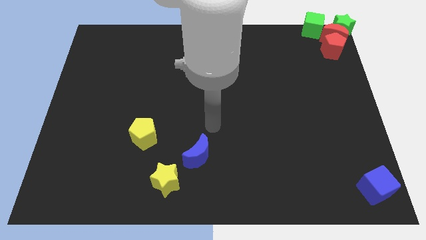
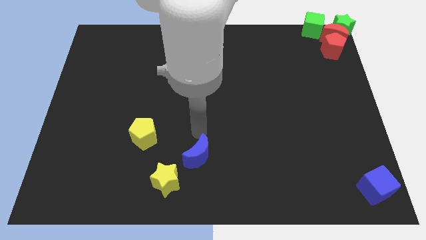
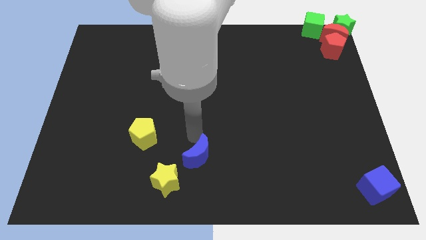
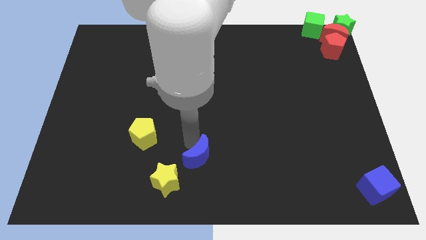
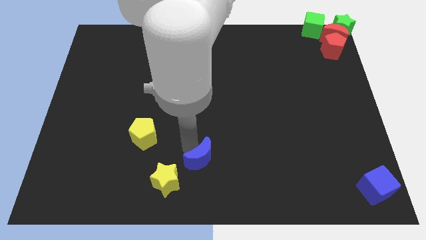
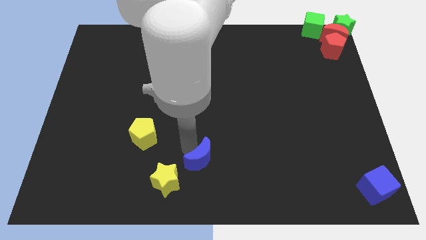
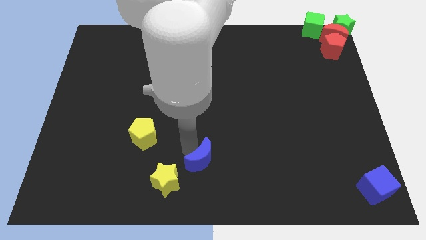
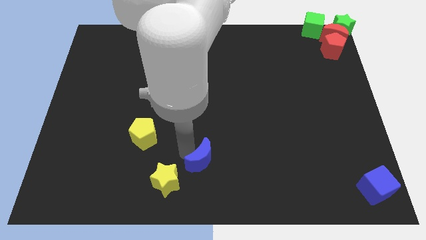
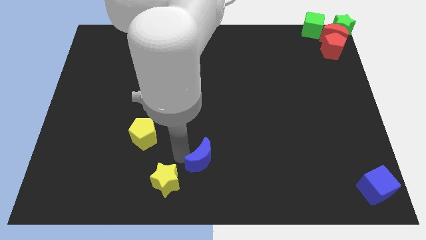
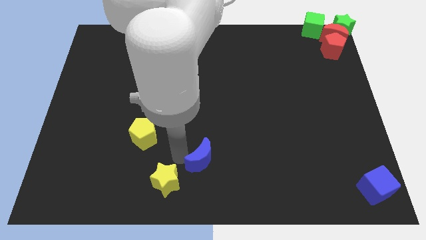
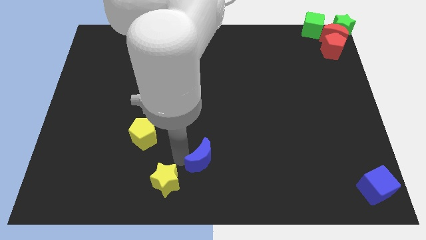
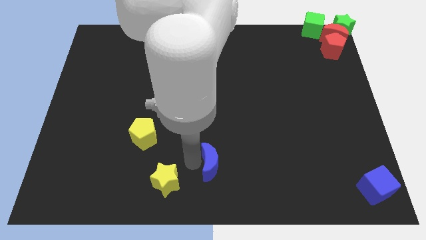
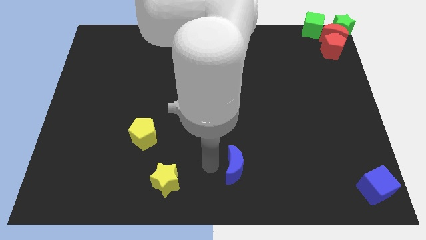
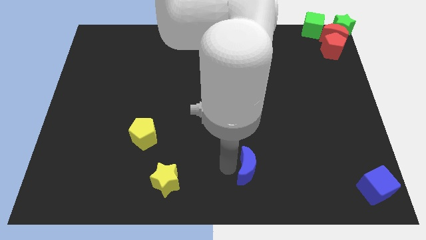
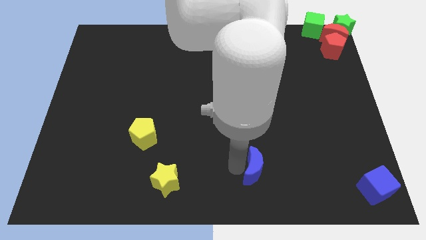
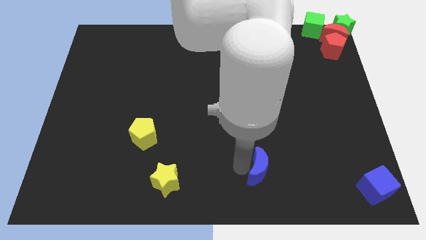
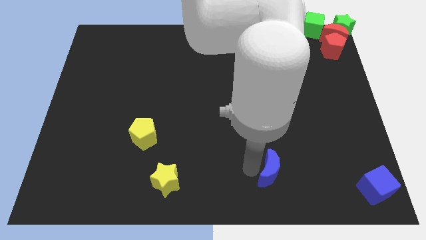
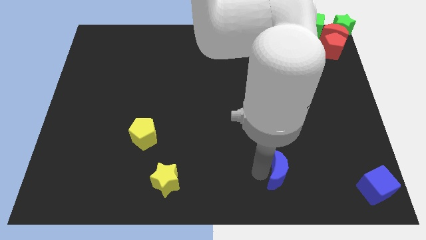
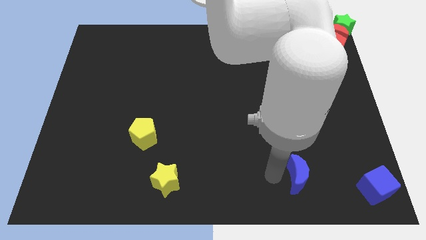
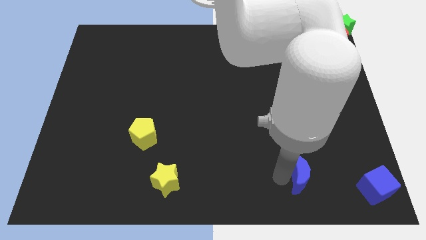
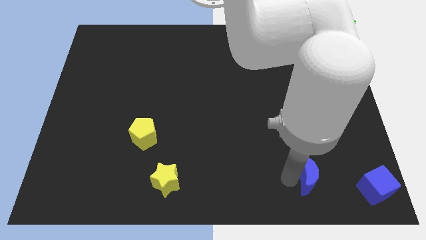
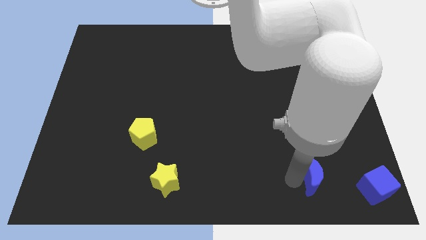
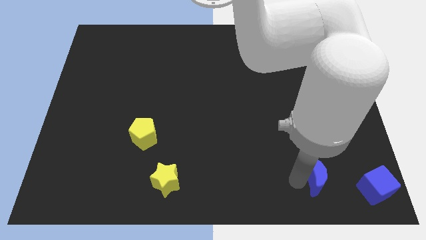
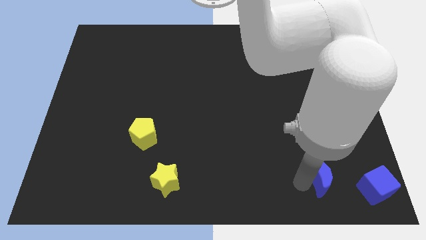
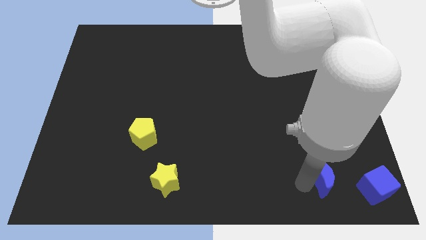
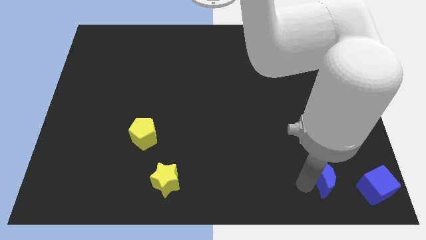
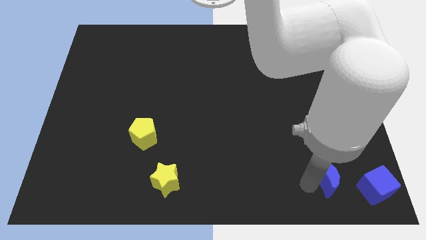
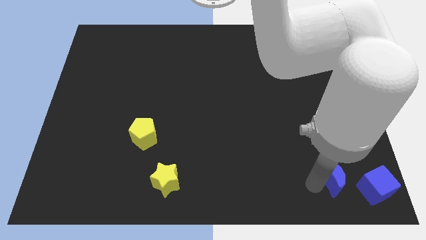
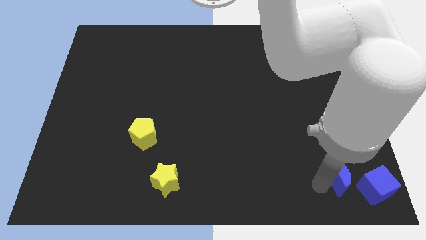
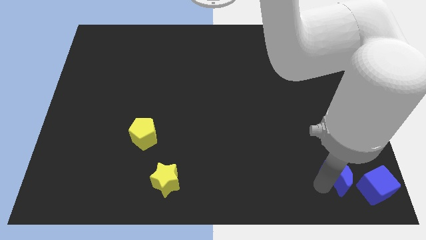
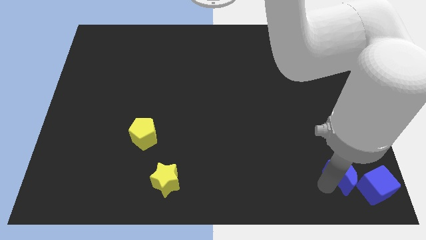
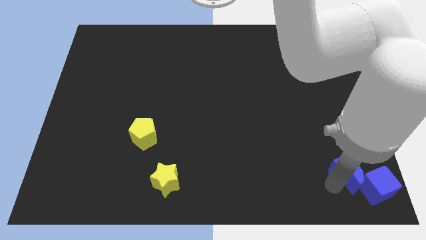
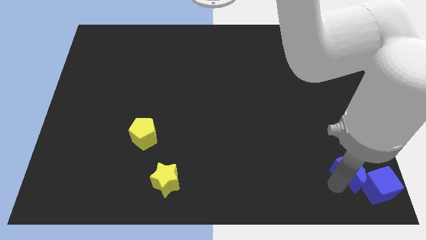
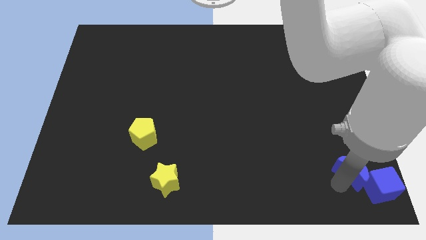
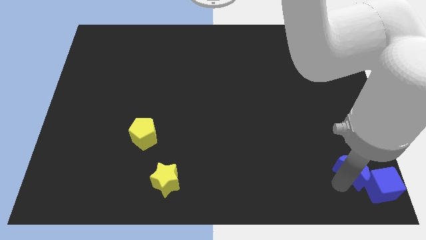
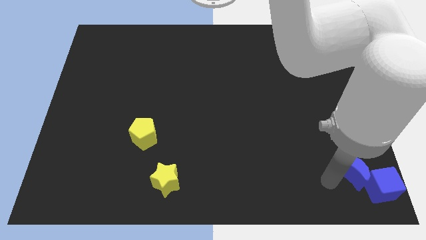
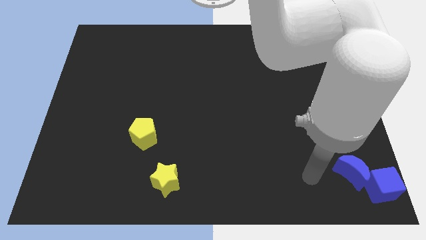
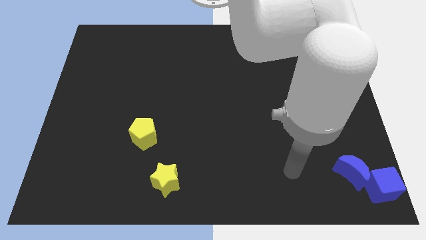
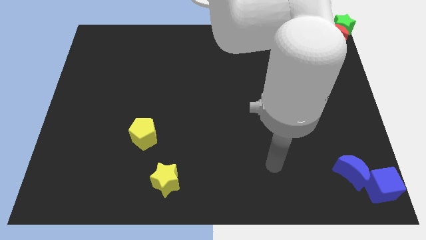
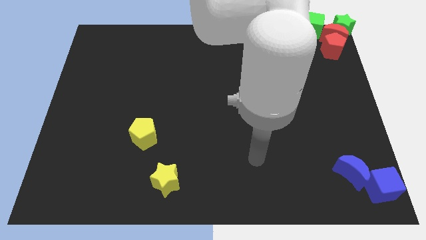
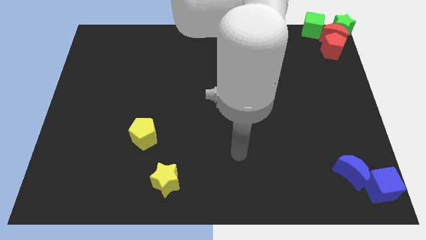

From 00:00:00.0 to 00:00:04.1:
push the blue crescent to the top left of blue cube

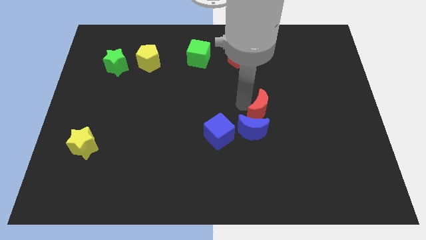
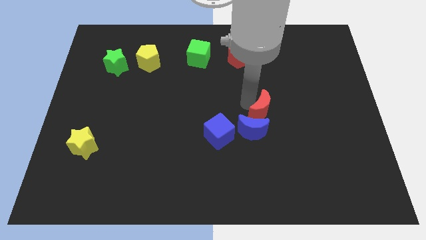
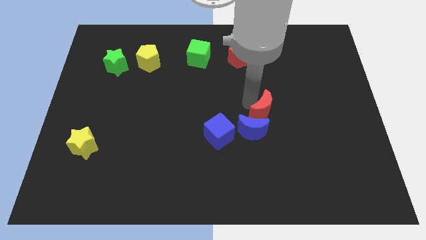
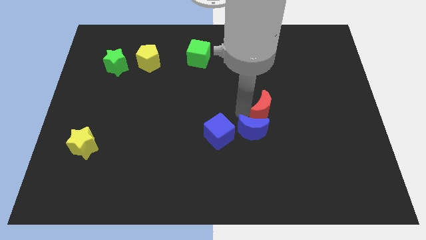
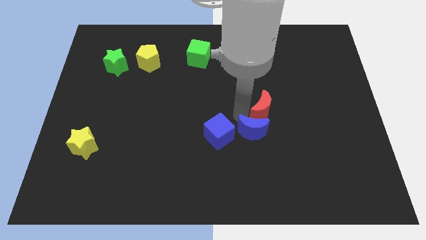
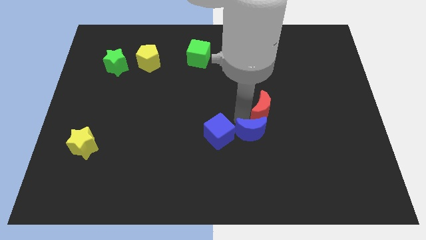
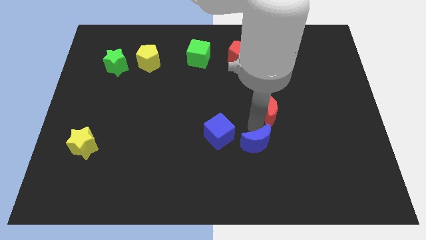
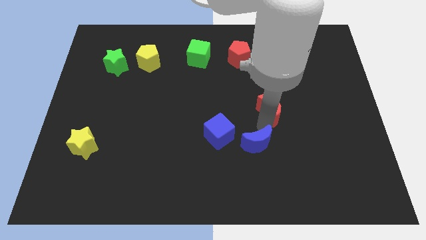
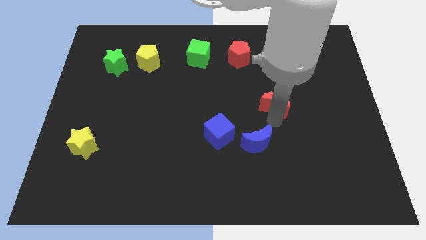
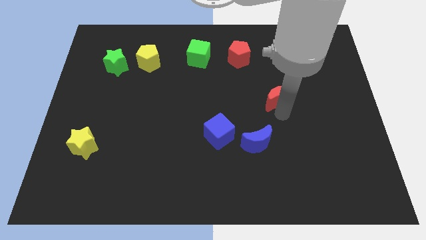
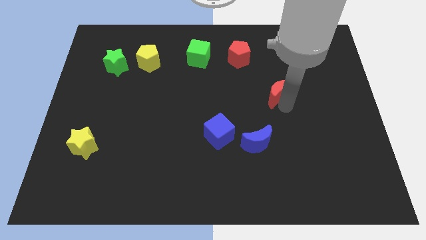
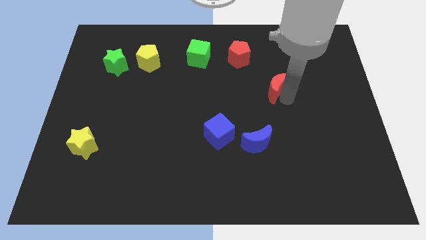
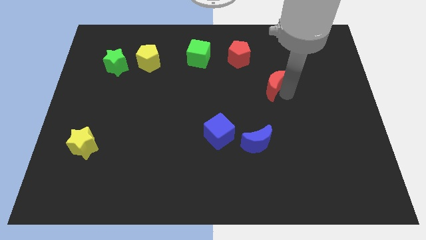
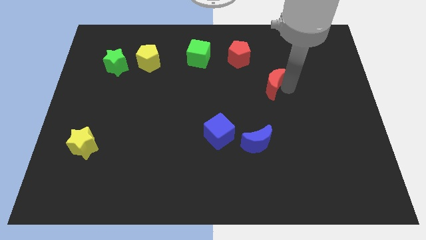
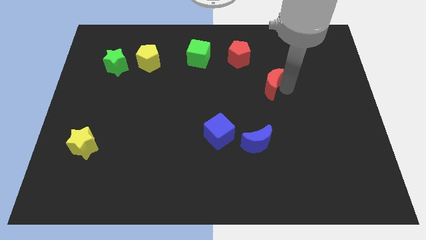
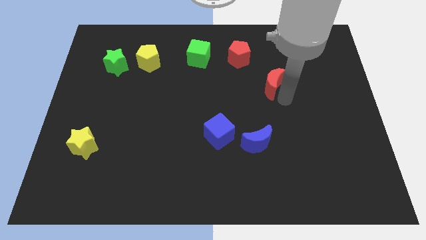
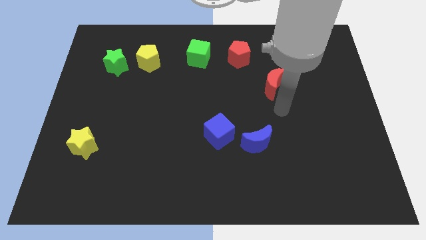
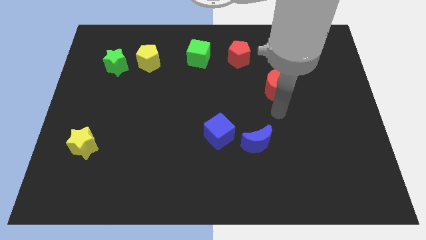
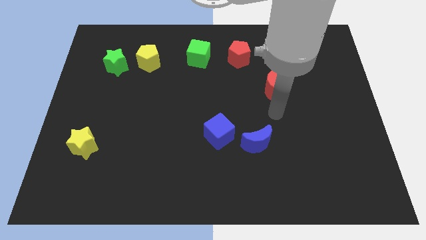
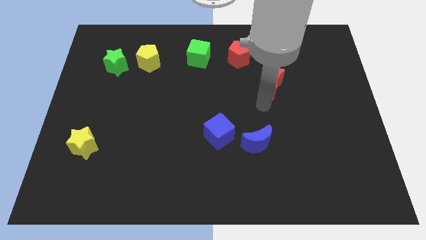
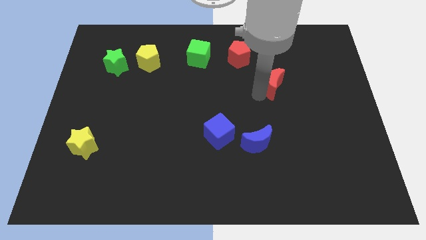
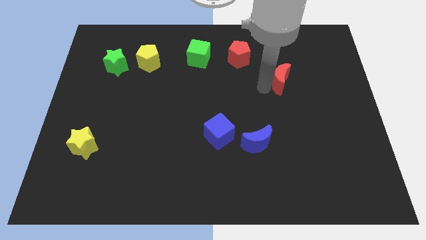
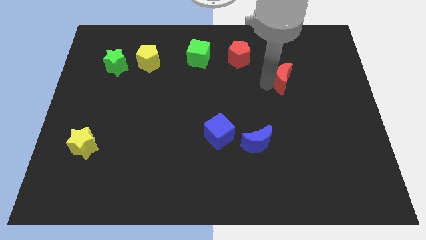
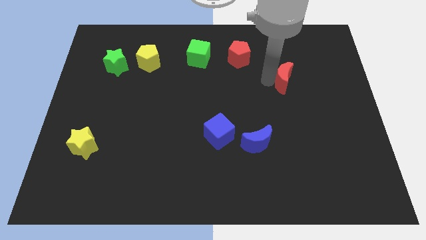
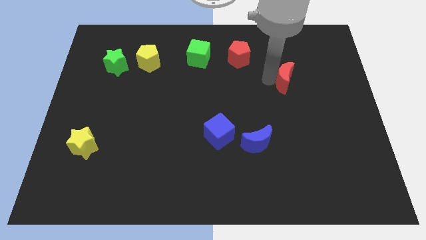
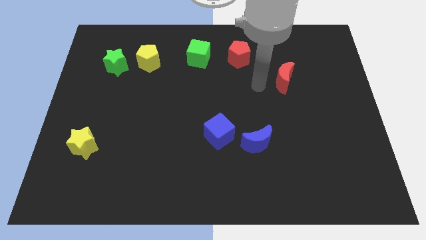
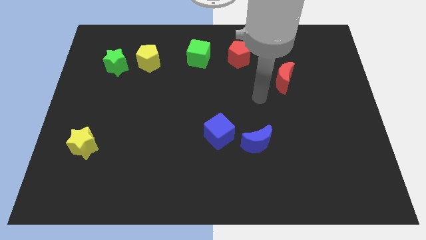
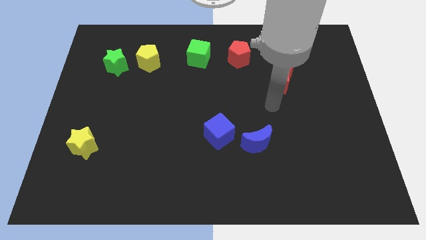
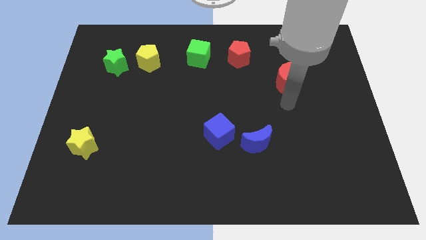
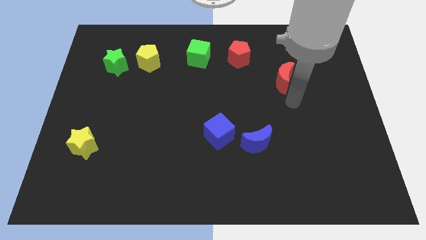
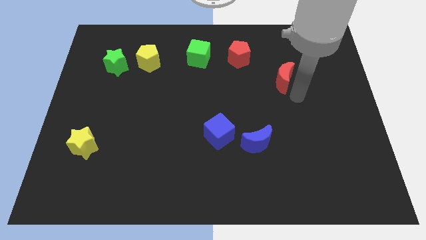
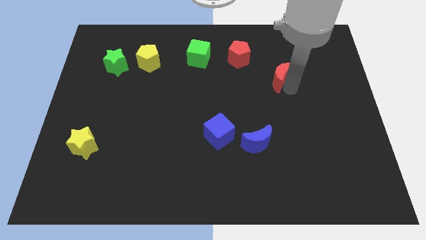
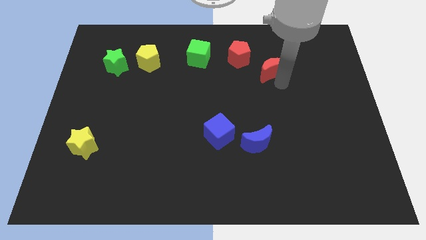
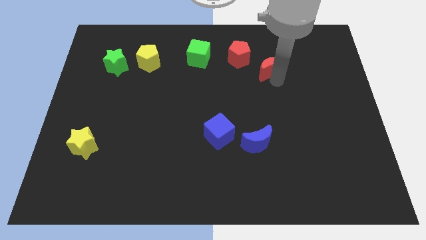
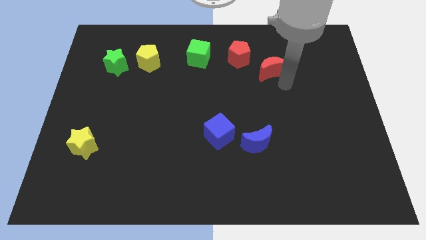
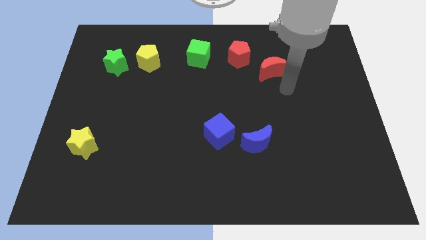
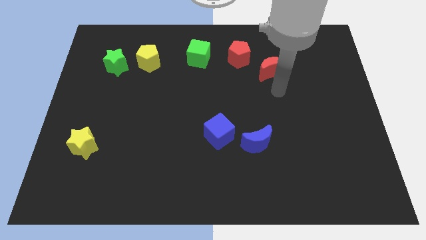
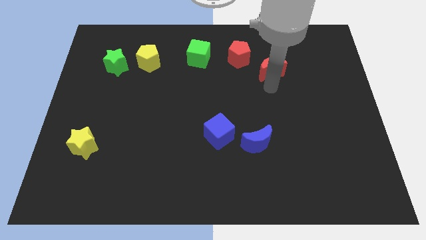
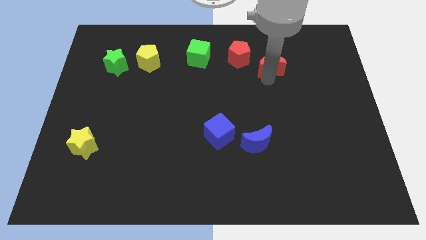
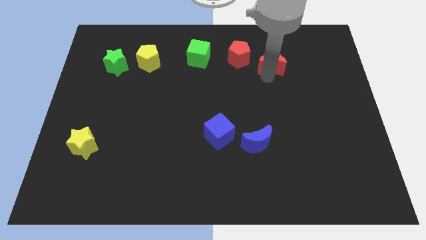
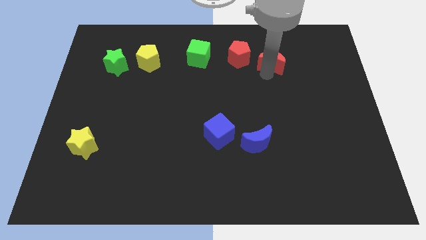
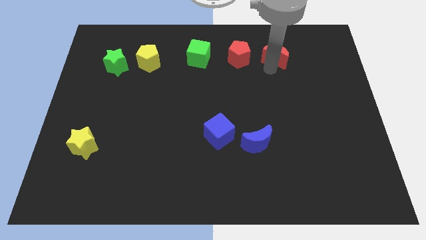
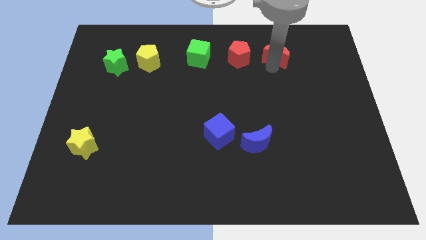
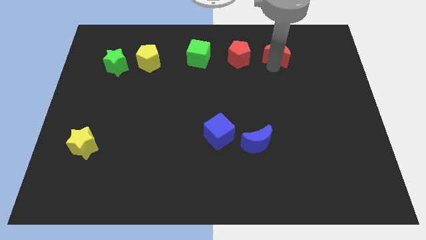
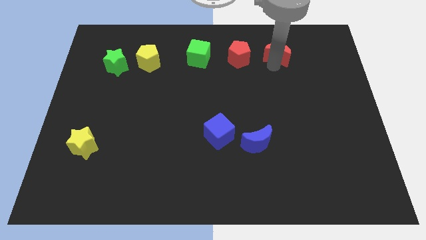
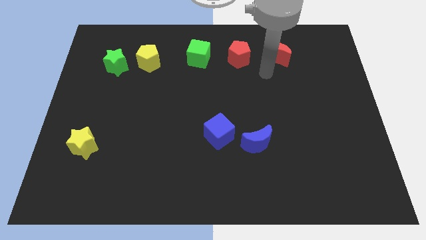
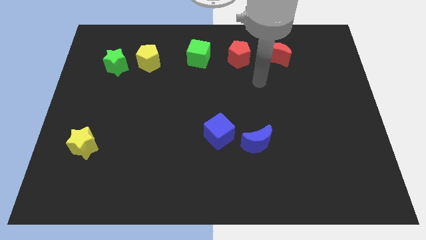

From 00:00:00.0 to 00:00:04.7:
push the red moon to the right side of the red pentagon

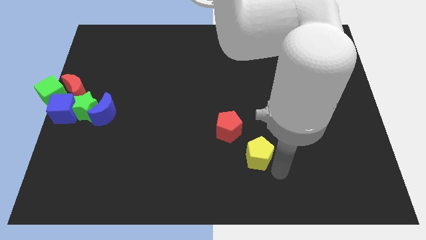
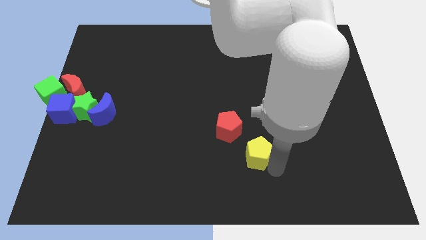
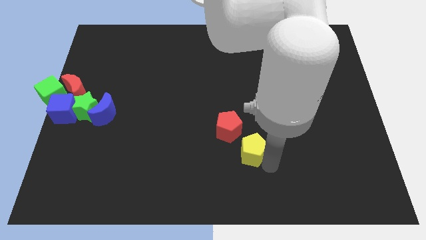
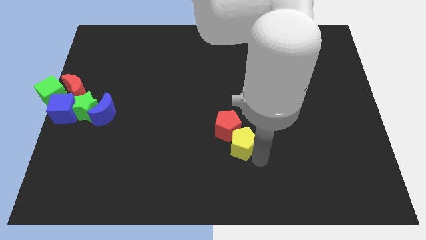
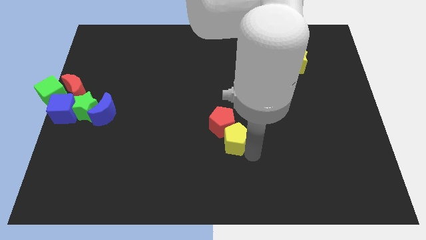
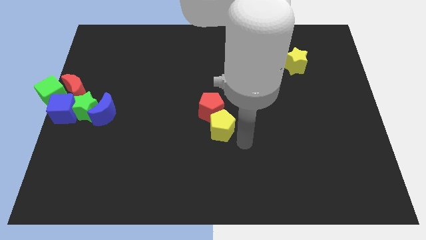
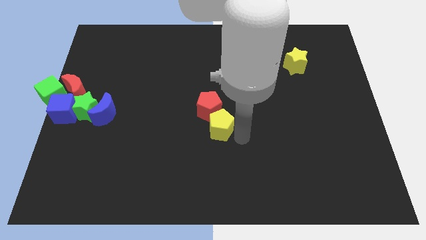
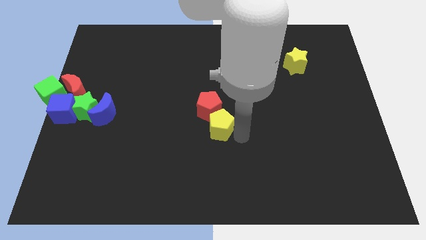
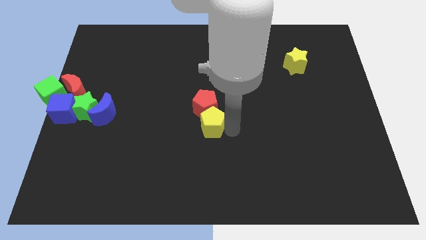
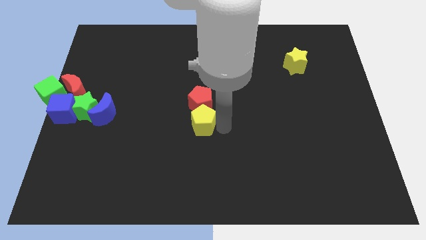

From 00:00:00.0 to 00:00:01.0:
push the red pentagon with a yellow pentagon to the middle of the board
